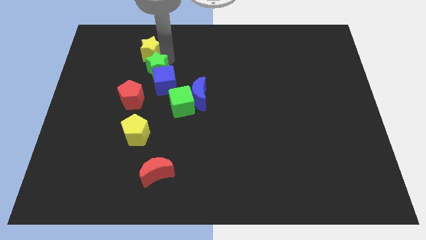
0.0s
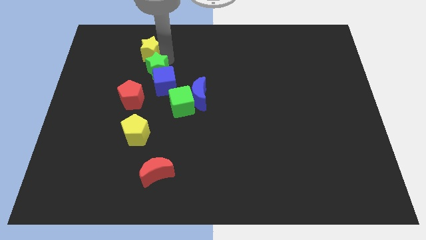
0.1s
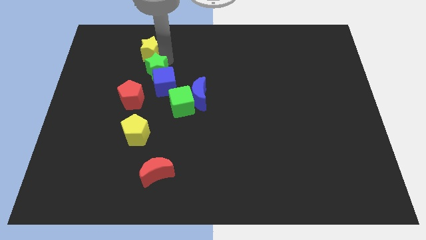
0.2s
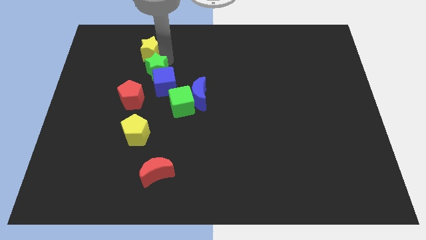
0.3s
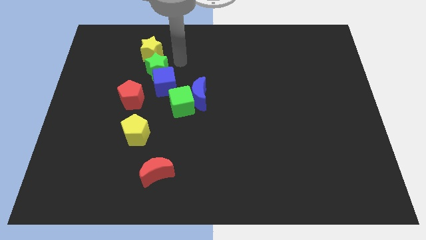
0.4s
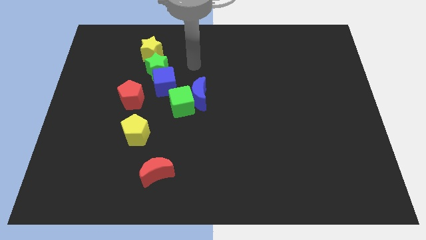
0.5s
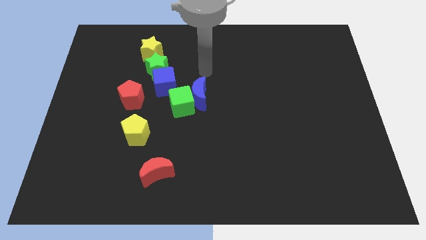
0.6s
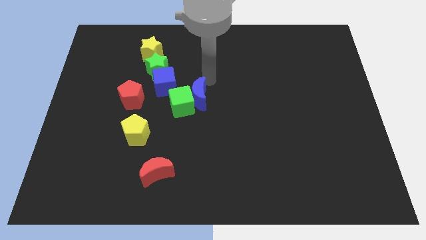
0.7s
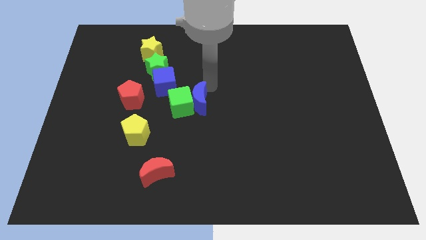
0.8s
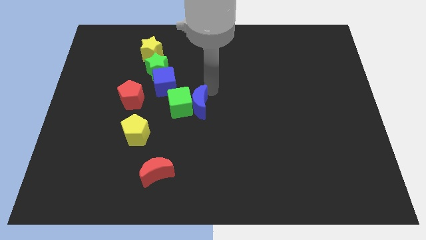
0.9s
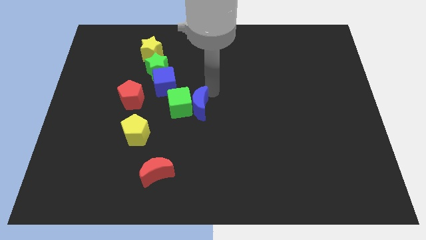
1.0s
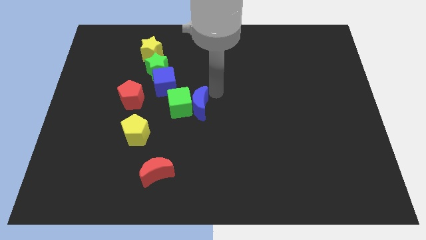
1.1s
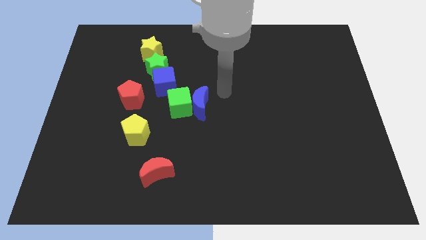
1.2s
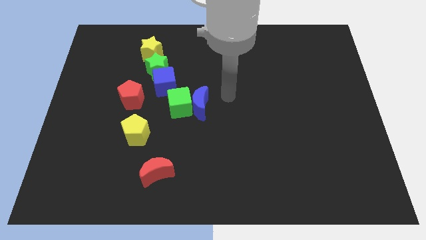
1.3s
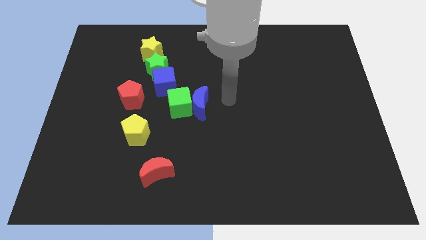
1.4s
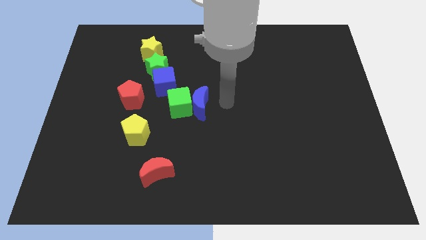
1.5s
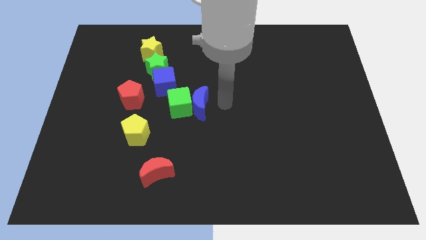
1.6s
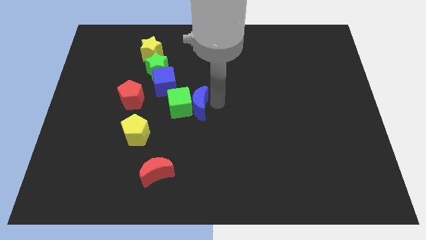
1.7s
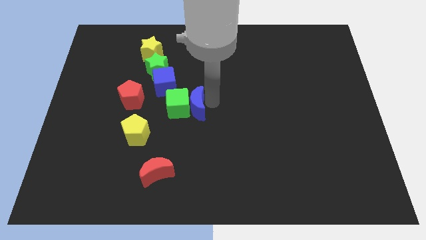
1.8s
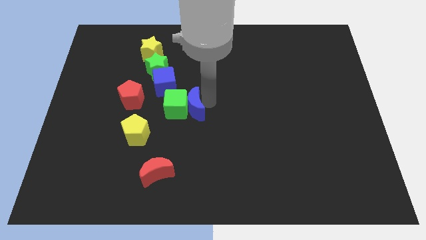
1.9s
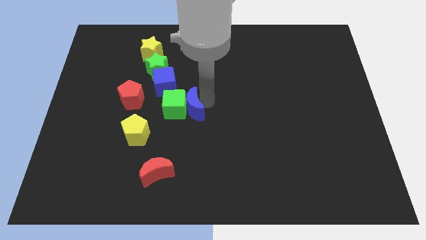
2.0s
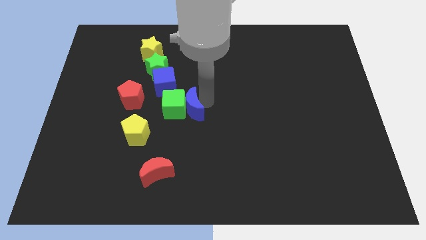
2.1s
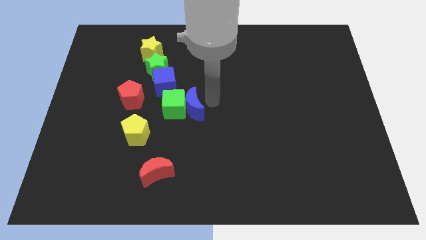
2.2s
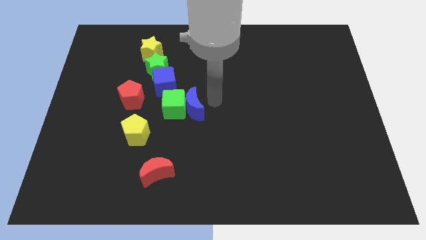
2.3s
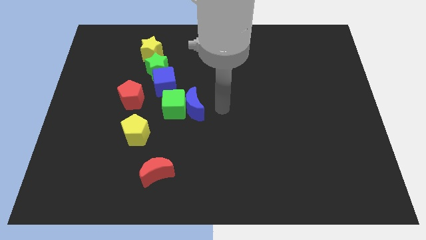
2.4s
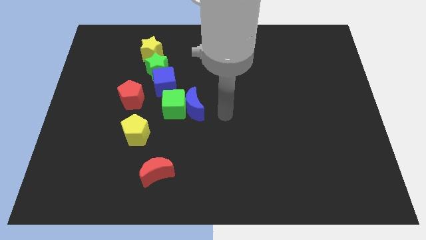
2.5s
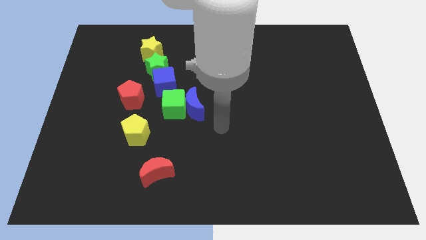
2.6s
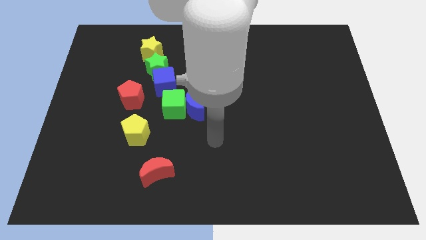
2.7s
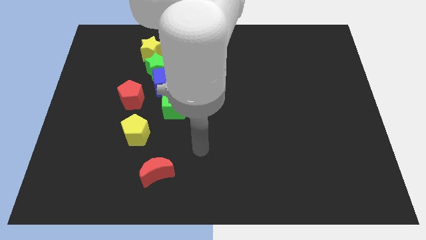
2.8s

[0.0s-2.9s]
slightly touch right to the blue moon

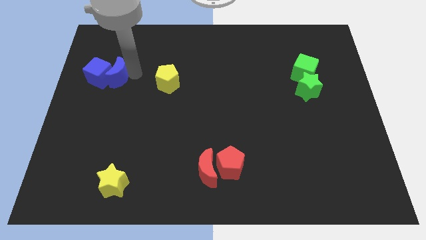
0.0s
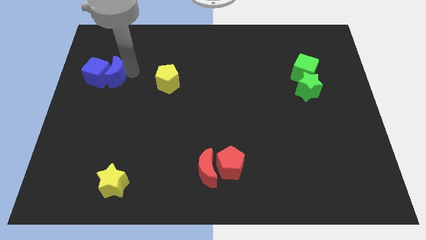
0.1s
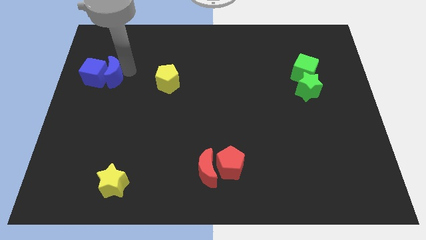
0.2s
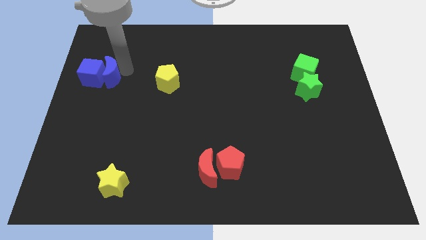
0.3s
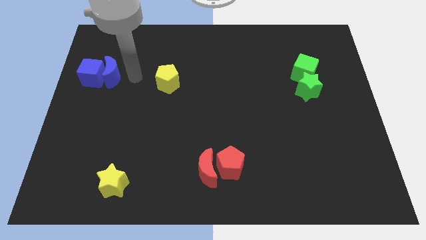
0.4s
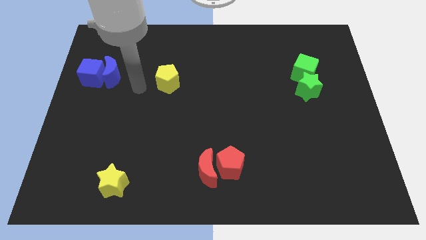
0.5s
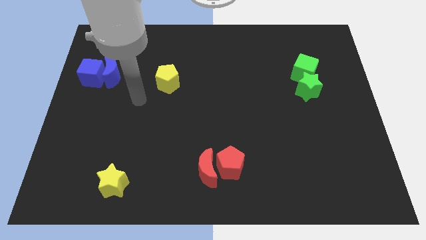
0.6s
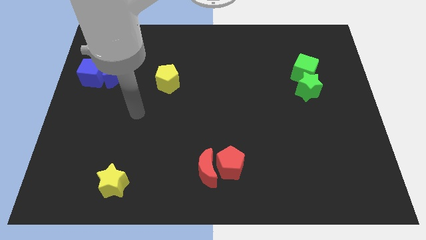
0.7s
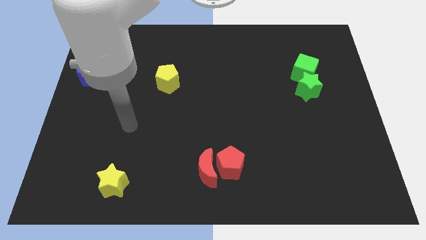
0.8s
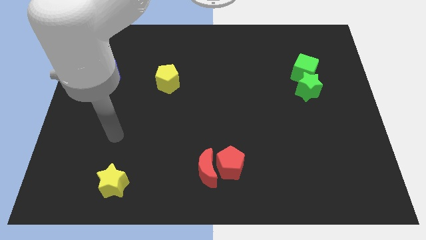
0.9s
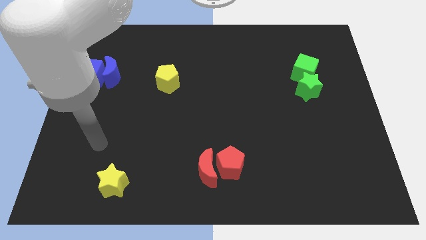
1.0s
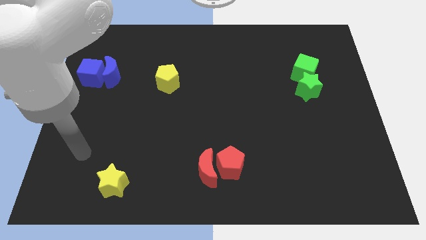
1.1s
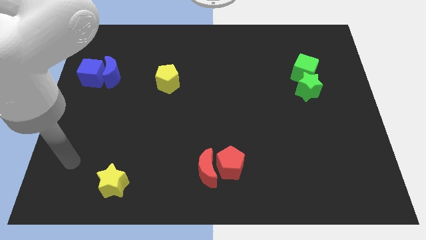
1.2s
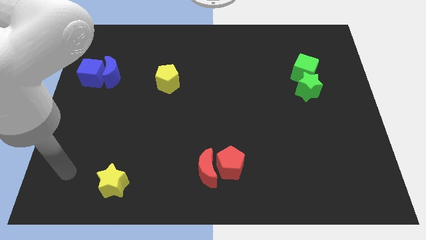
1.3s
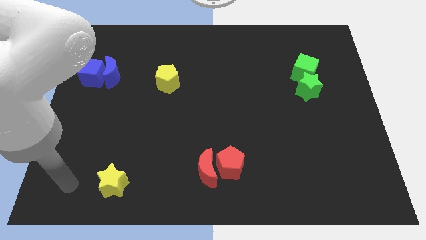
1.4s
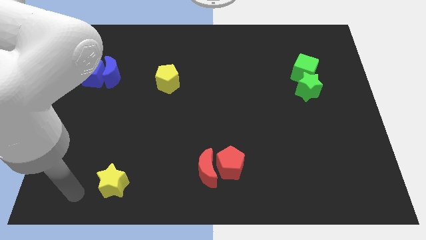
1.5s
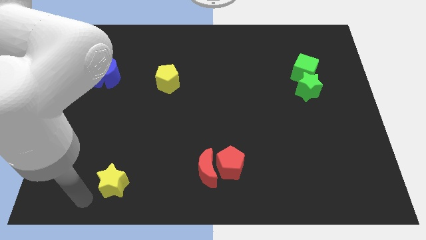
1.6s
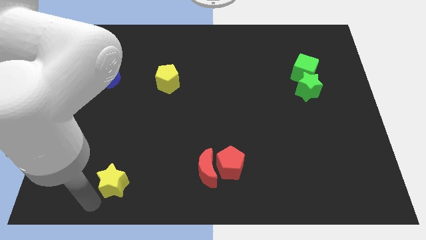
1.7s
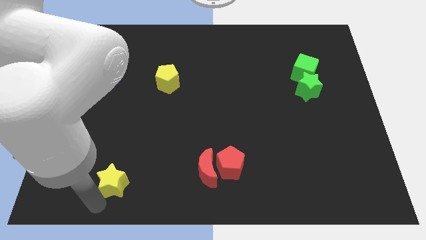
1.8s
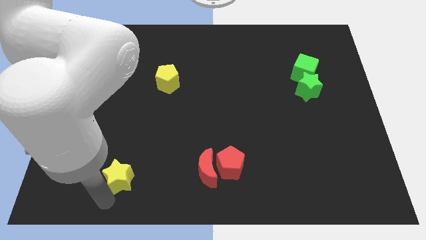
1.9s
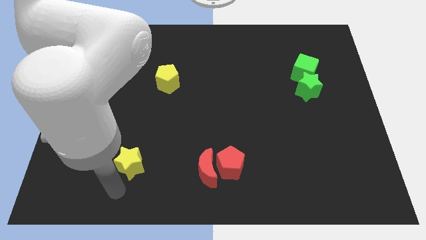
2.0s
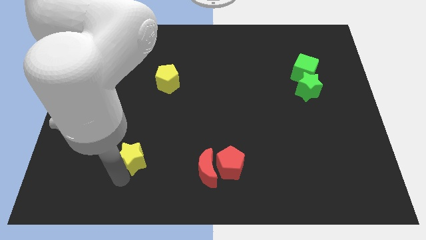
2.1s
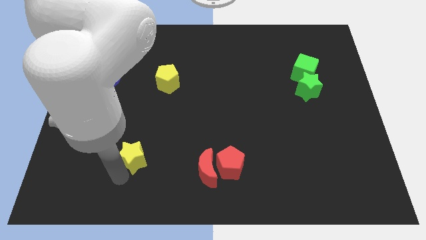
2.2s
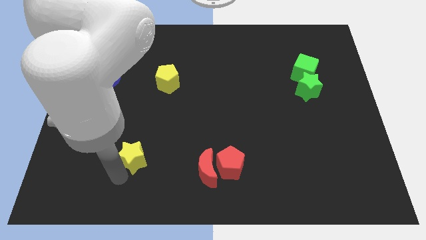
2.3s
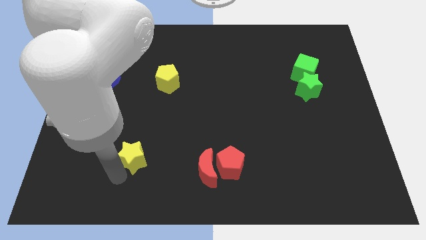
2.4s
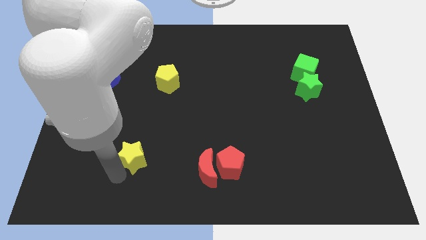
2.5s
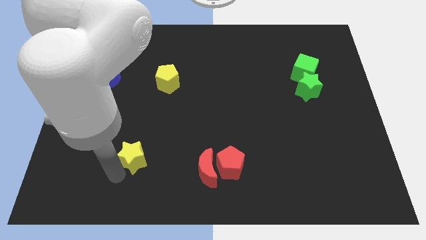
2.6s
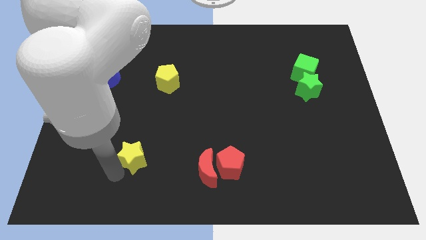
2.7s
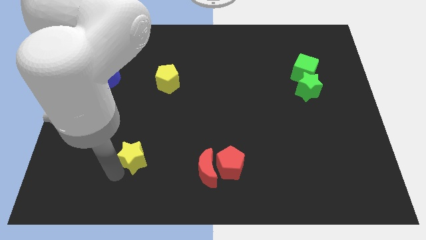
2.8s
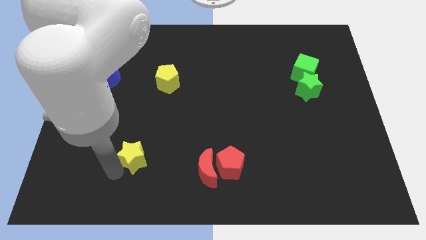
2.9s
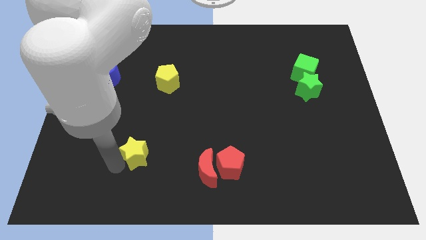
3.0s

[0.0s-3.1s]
push the yellow star upwards

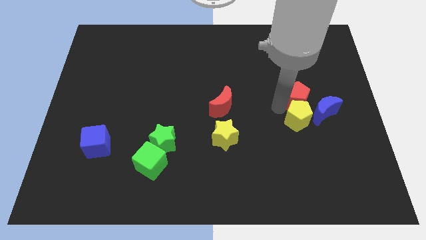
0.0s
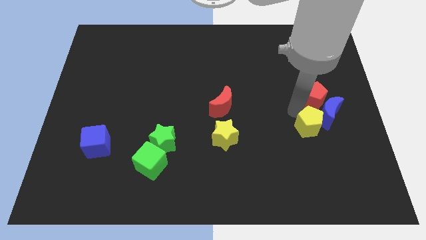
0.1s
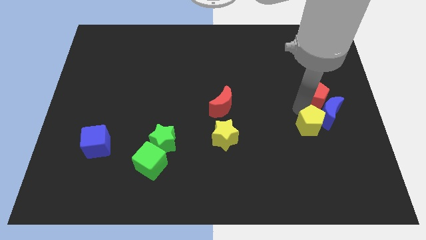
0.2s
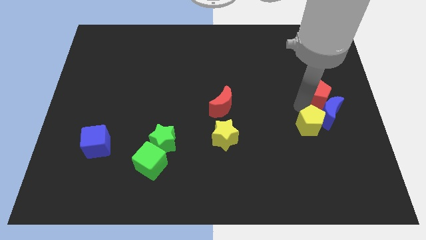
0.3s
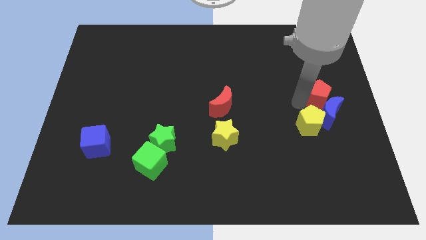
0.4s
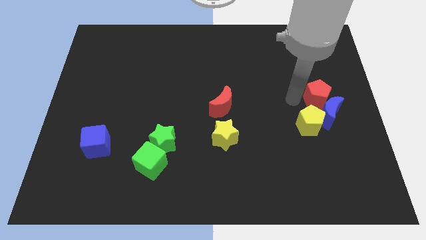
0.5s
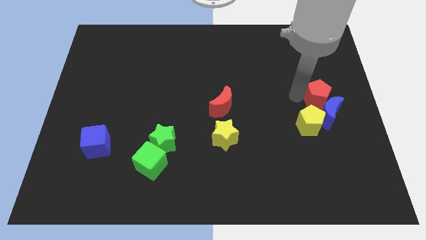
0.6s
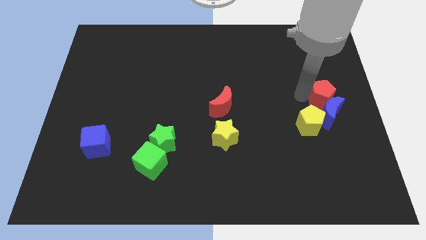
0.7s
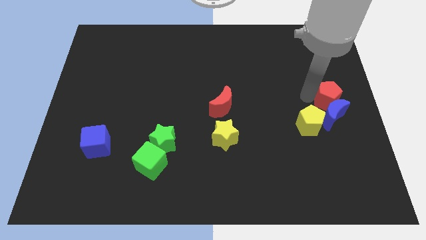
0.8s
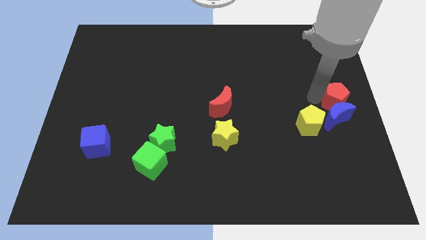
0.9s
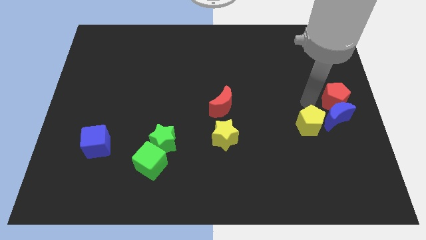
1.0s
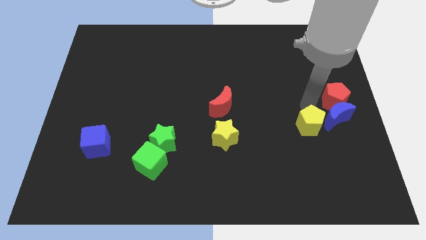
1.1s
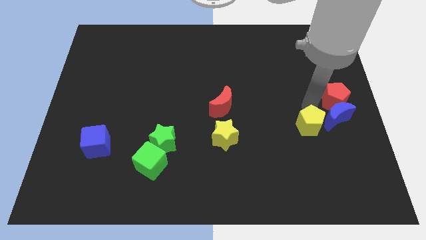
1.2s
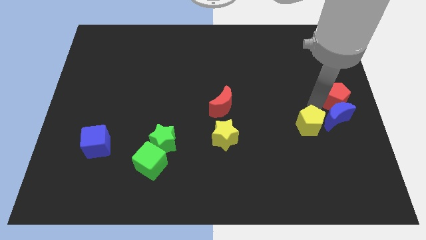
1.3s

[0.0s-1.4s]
slightly push the red pentagon on top of the blue crescent

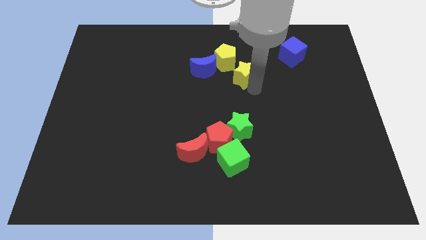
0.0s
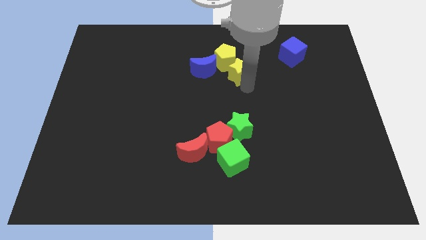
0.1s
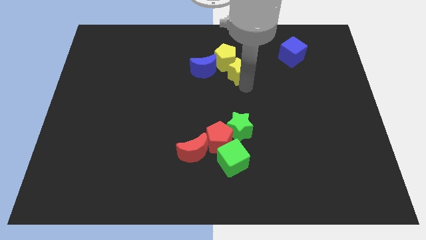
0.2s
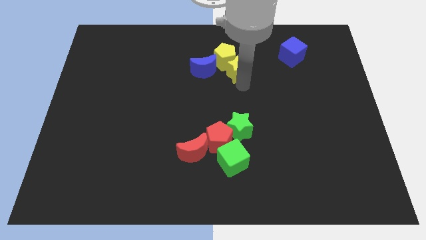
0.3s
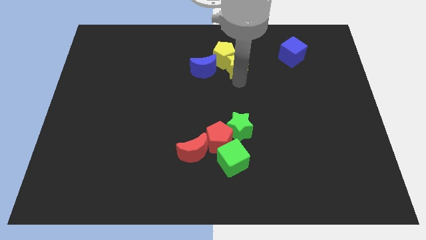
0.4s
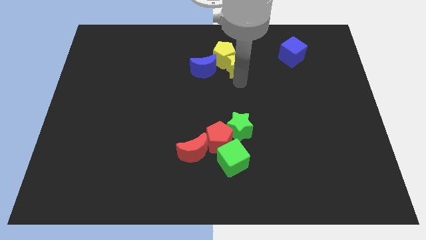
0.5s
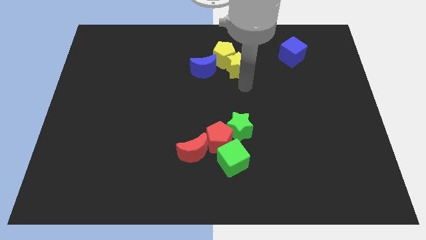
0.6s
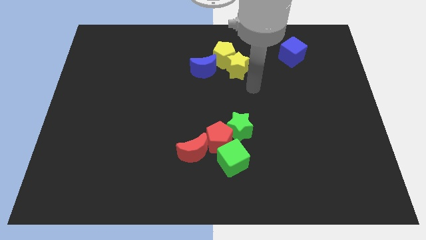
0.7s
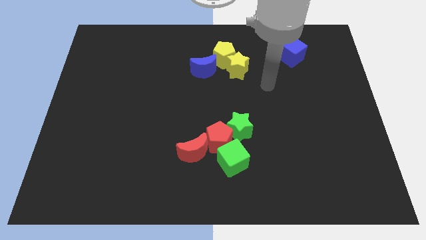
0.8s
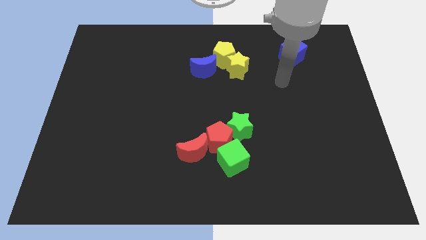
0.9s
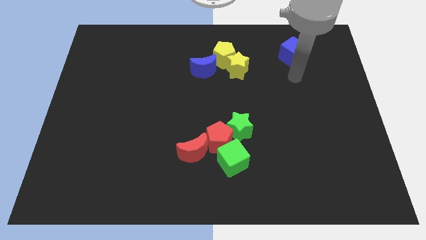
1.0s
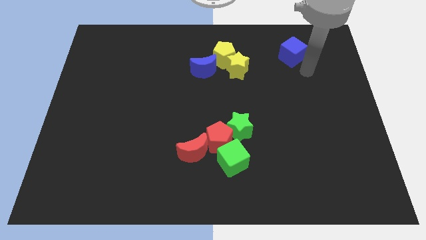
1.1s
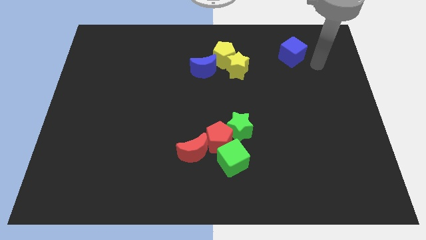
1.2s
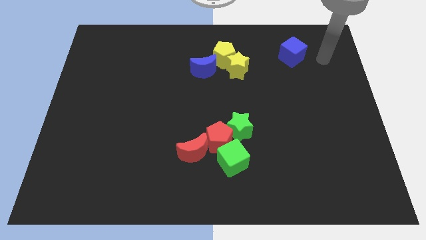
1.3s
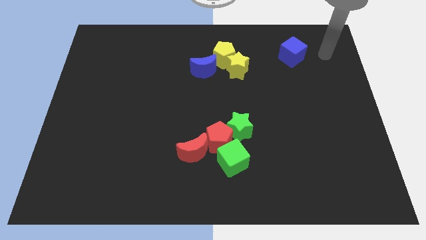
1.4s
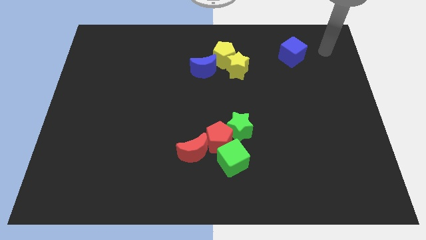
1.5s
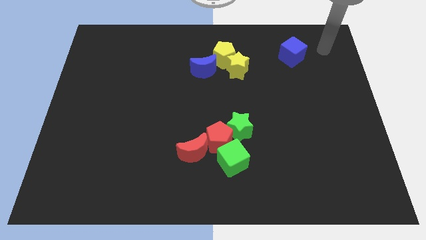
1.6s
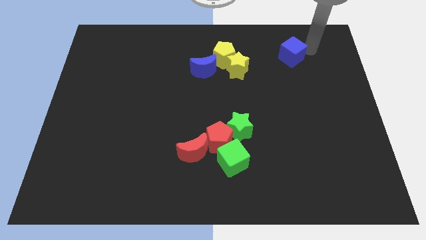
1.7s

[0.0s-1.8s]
push yellow star towards yellow pentagan
